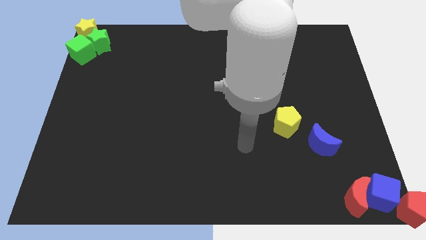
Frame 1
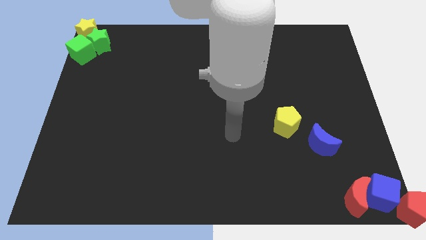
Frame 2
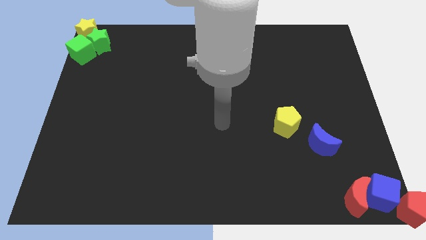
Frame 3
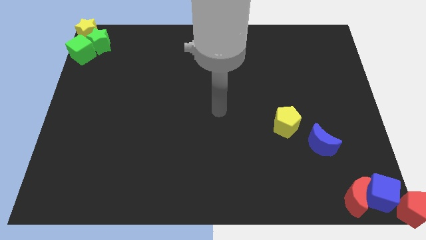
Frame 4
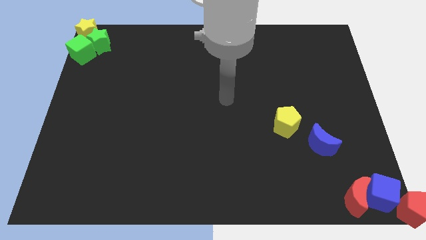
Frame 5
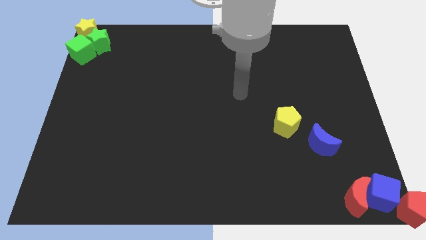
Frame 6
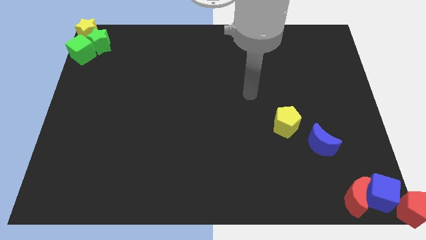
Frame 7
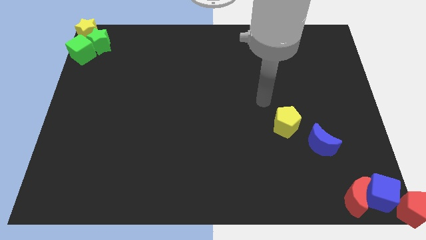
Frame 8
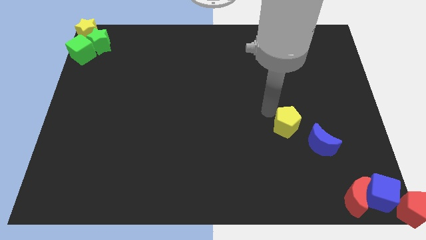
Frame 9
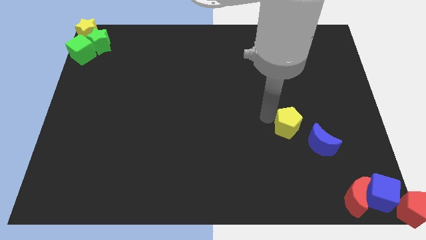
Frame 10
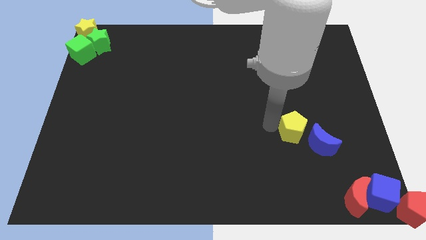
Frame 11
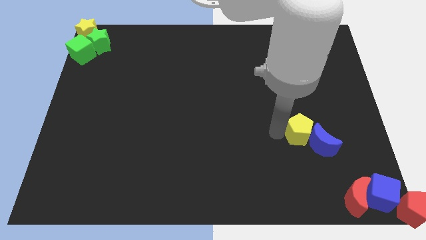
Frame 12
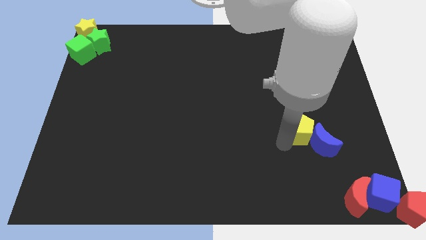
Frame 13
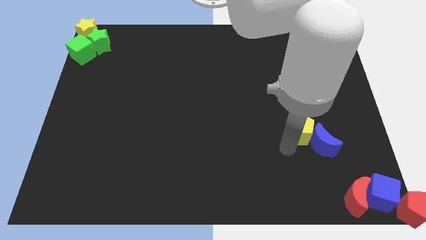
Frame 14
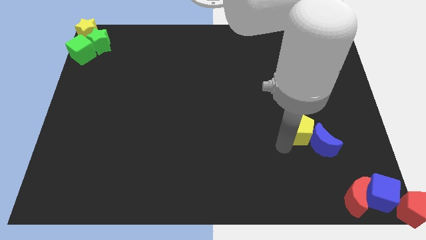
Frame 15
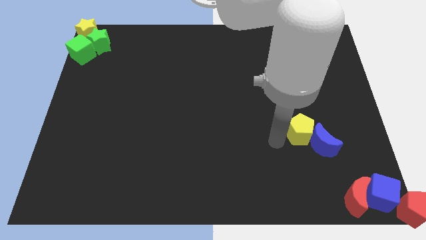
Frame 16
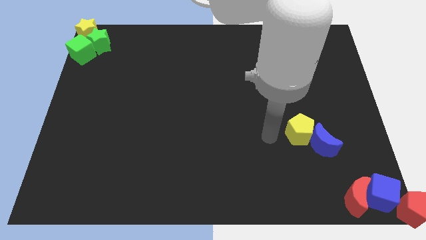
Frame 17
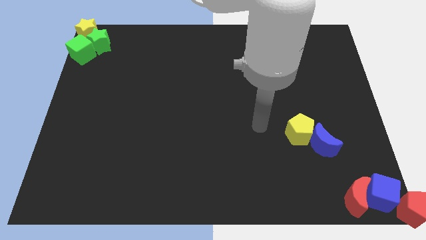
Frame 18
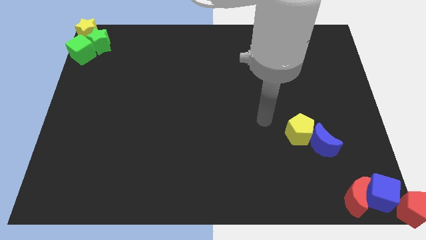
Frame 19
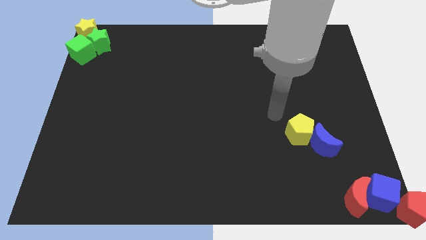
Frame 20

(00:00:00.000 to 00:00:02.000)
push the yellow pentagon into the blue moon

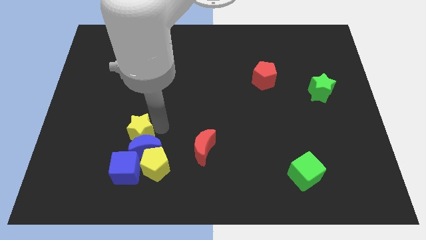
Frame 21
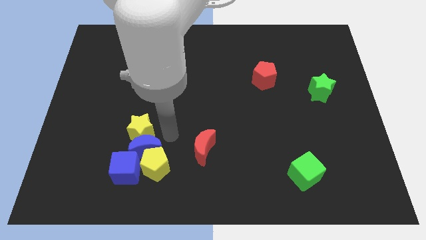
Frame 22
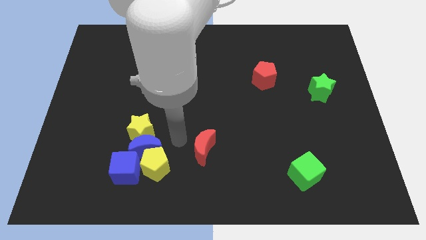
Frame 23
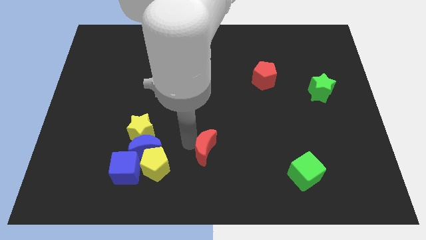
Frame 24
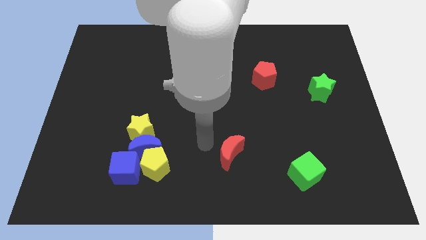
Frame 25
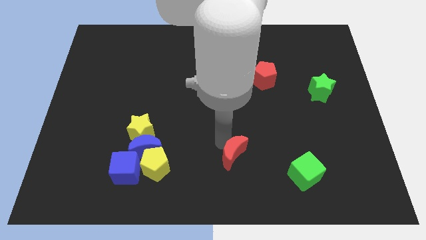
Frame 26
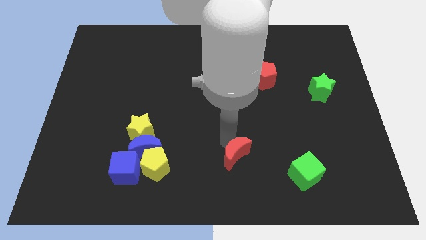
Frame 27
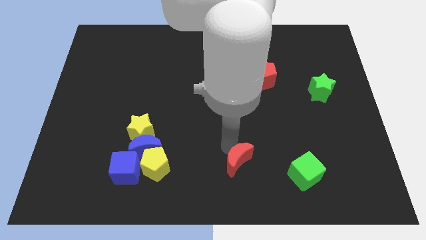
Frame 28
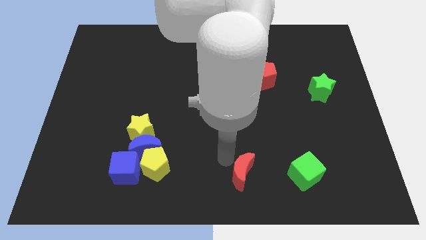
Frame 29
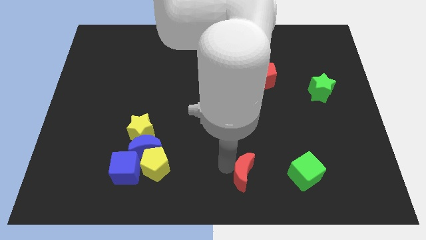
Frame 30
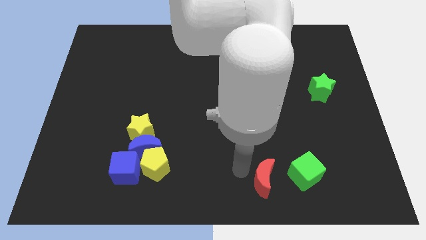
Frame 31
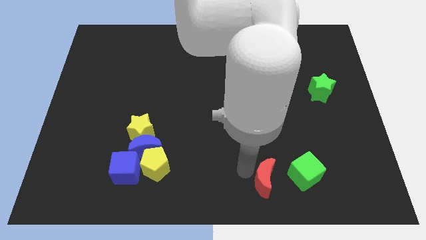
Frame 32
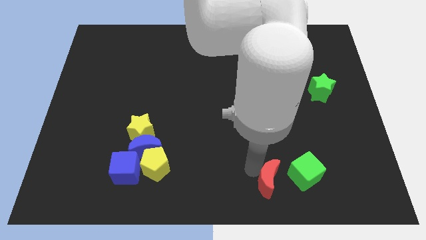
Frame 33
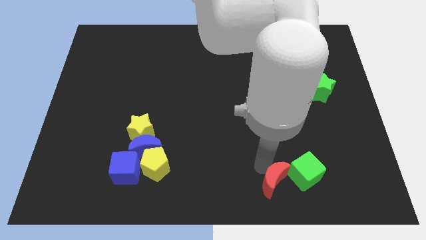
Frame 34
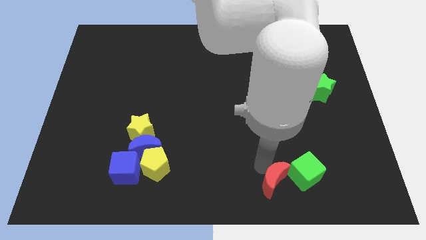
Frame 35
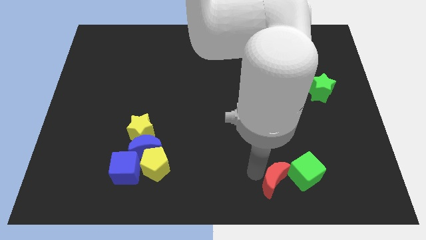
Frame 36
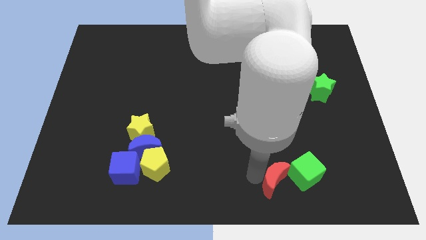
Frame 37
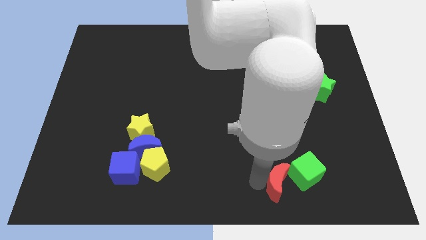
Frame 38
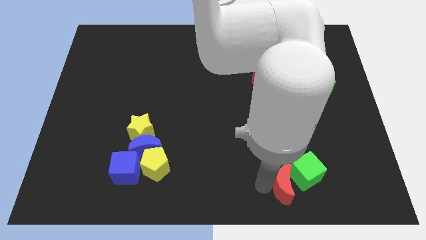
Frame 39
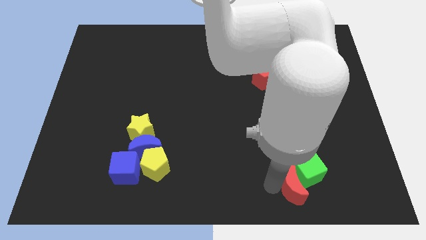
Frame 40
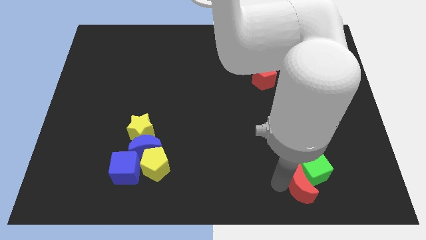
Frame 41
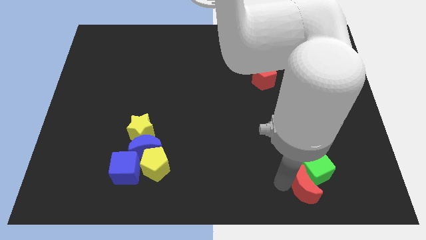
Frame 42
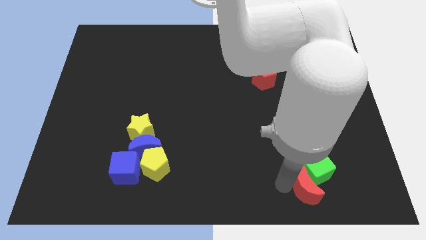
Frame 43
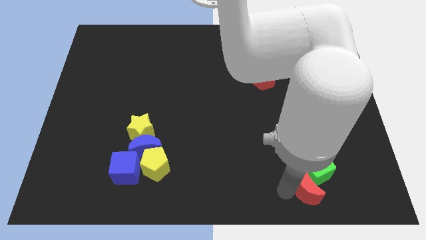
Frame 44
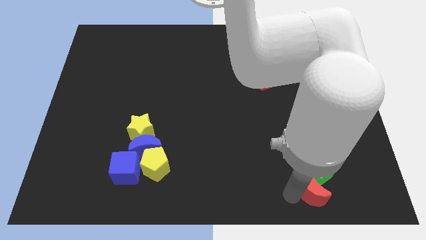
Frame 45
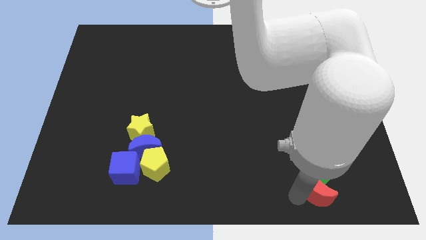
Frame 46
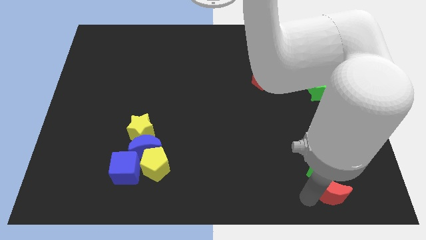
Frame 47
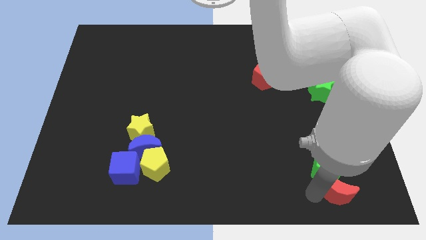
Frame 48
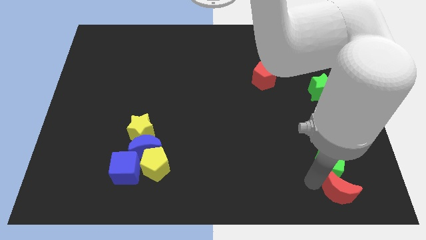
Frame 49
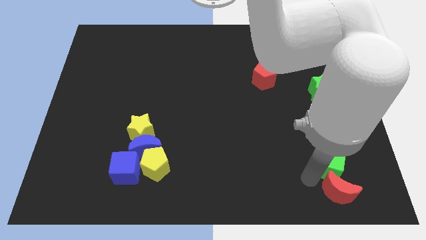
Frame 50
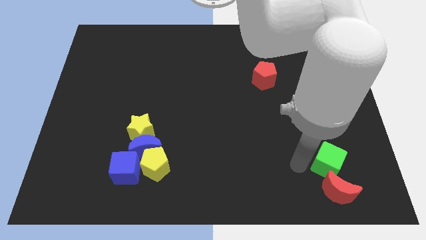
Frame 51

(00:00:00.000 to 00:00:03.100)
move the red crescent to the bottom side of the green cube

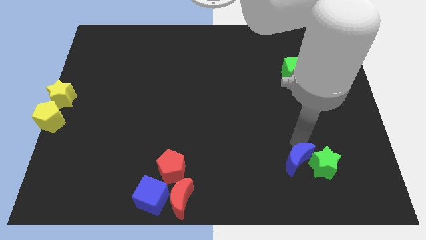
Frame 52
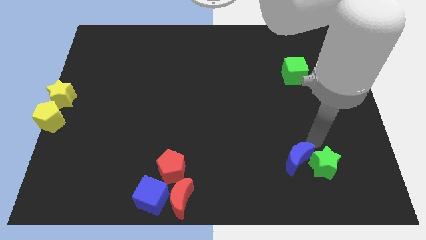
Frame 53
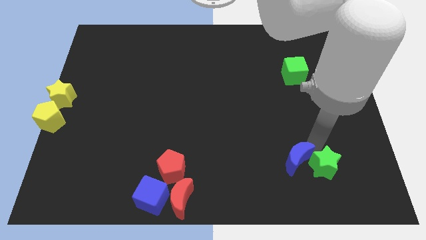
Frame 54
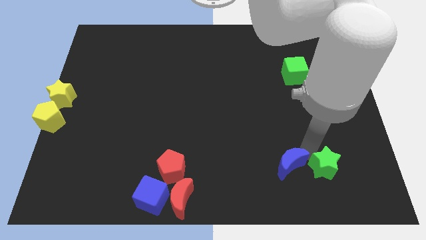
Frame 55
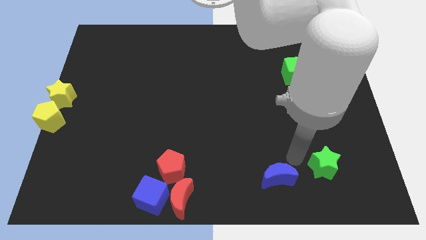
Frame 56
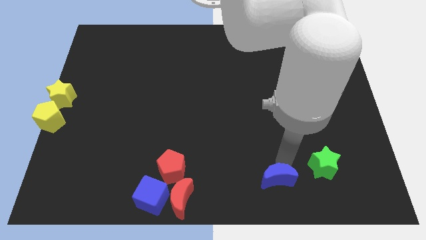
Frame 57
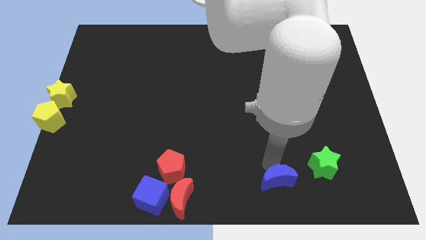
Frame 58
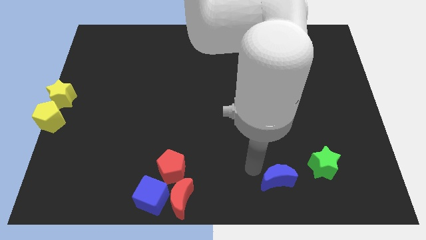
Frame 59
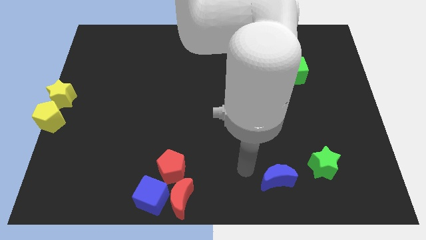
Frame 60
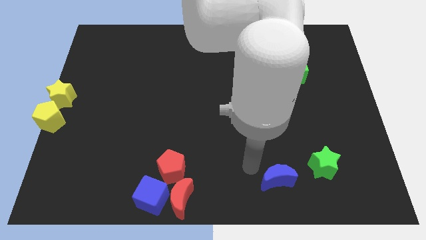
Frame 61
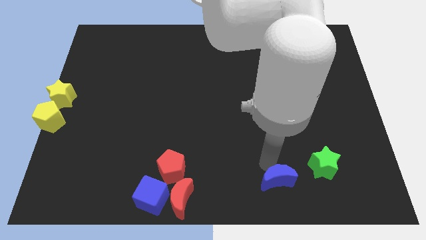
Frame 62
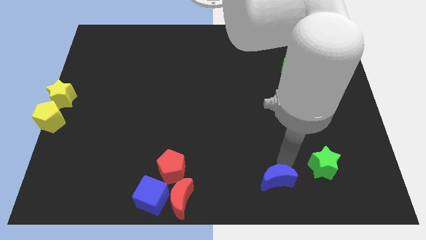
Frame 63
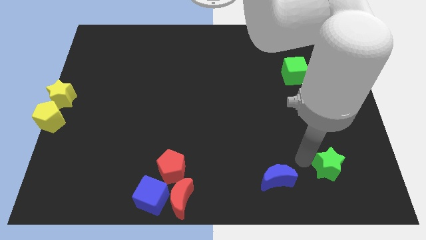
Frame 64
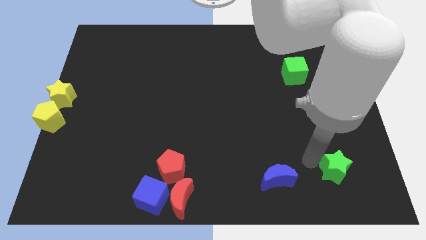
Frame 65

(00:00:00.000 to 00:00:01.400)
separate the green star and blue moon

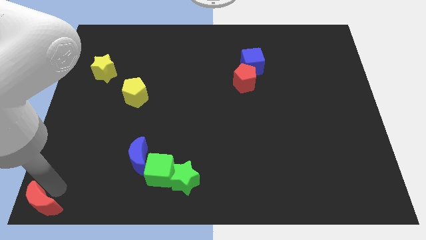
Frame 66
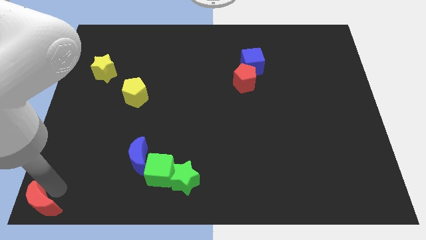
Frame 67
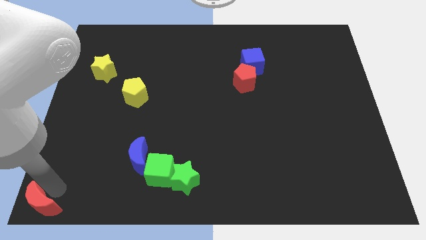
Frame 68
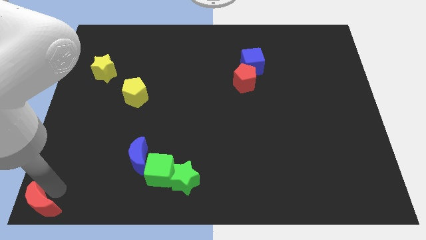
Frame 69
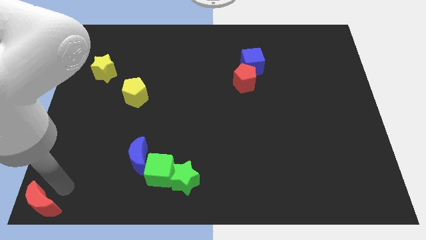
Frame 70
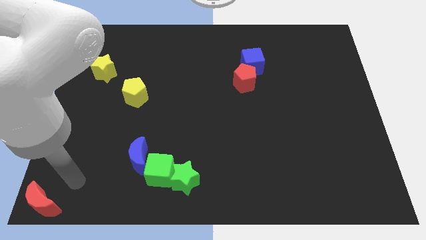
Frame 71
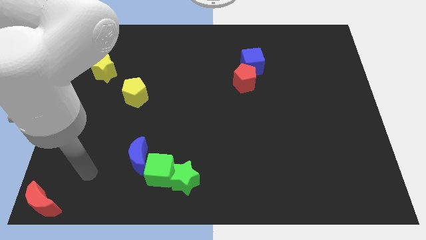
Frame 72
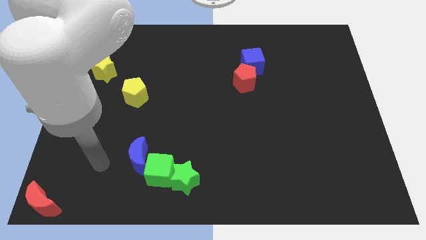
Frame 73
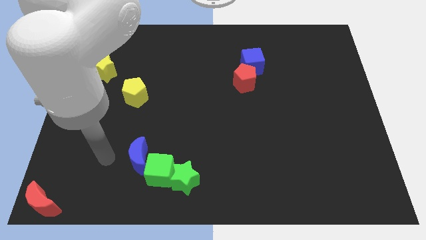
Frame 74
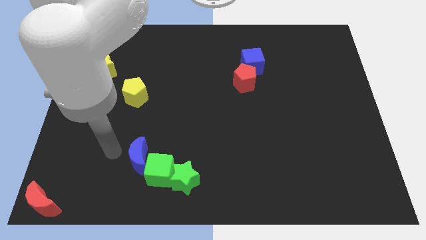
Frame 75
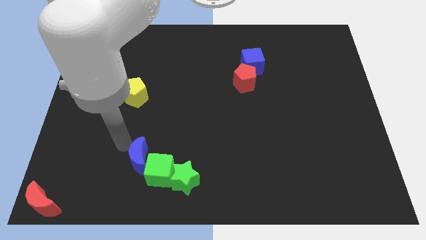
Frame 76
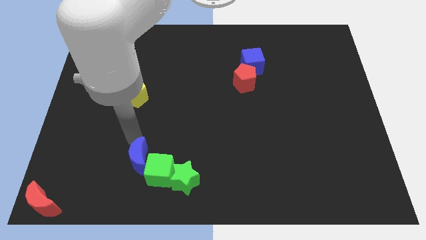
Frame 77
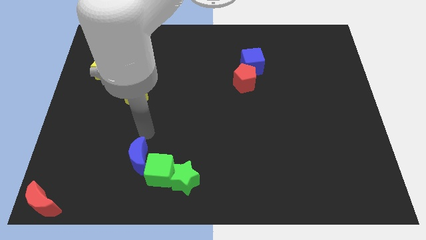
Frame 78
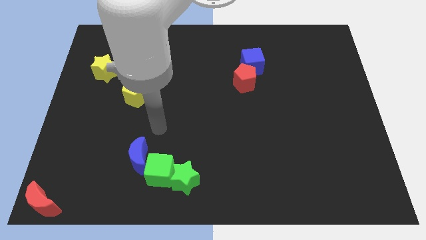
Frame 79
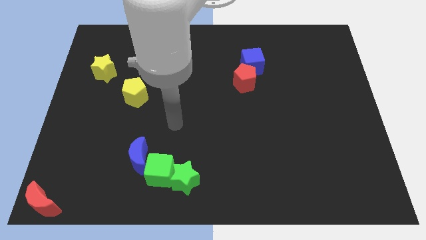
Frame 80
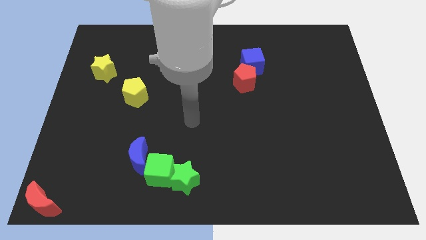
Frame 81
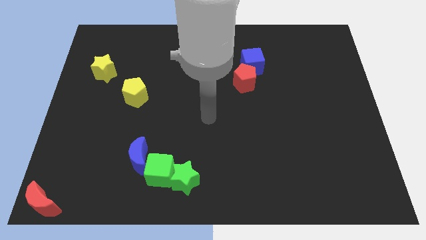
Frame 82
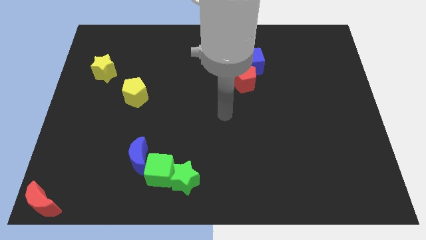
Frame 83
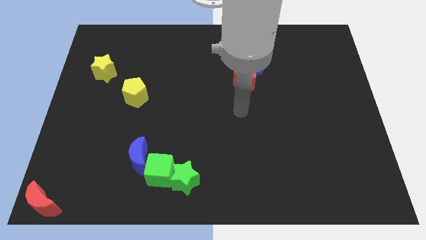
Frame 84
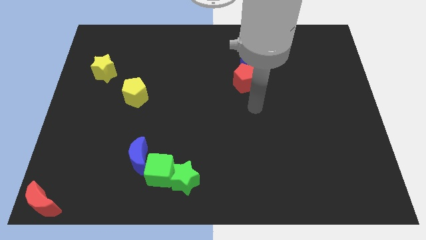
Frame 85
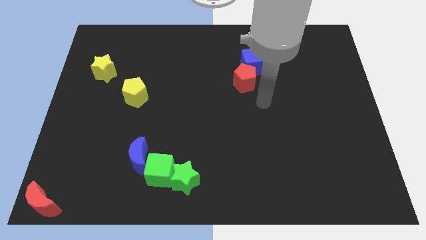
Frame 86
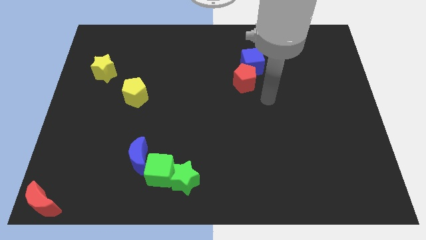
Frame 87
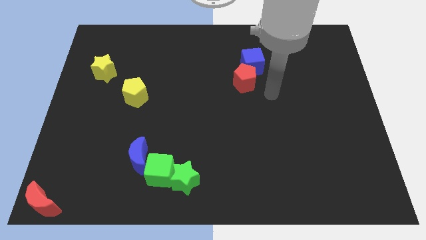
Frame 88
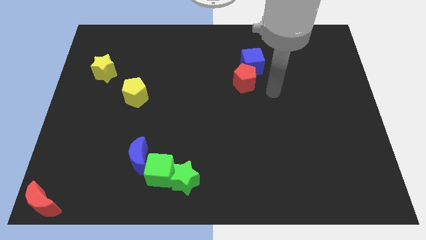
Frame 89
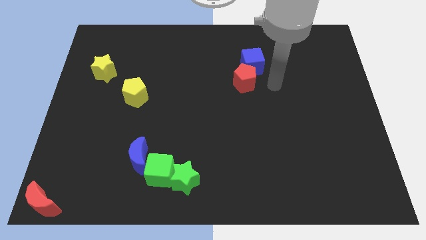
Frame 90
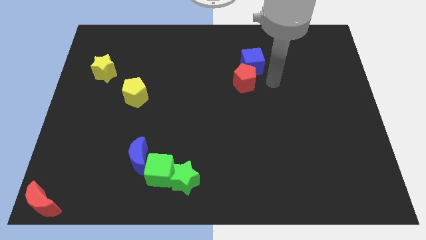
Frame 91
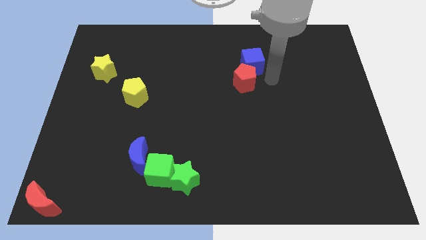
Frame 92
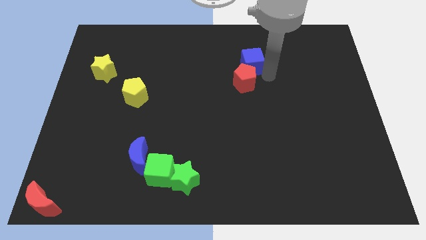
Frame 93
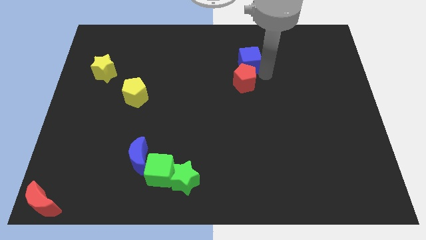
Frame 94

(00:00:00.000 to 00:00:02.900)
move your arm to the bottom of the blue cube
